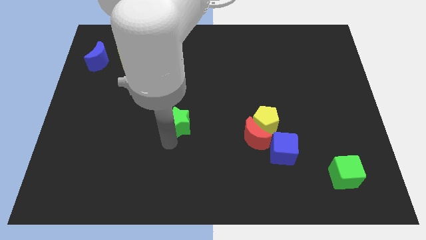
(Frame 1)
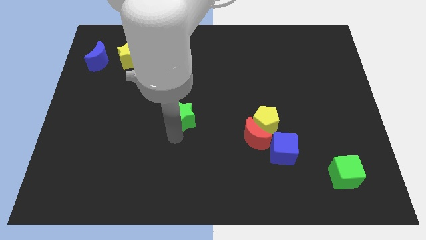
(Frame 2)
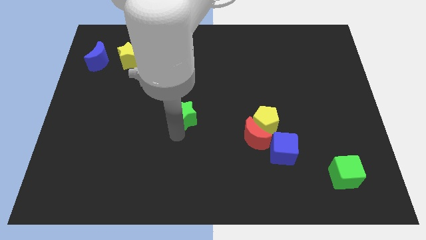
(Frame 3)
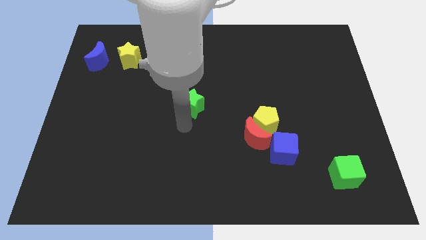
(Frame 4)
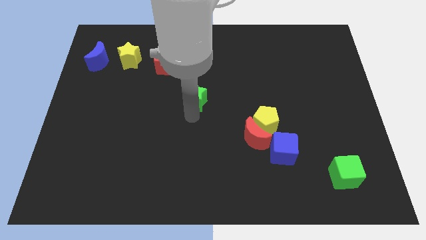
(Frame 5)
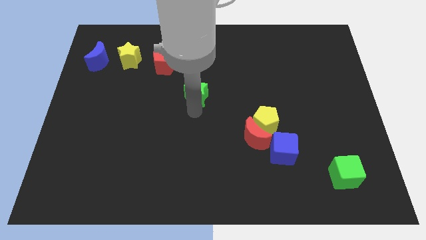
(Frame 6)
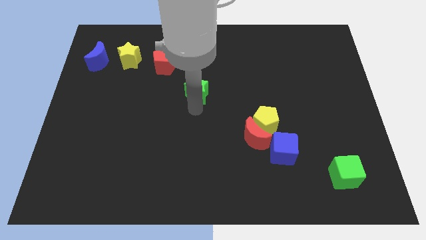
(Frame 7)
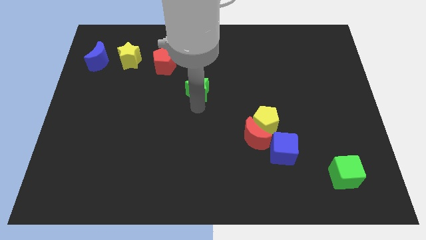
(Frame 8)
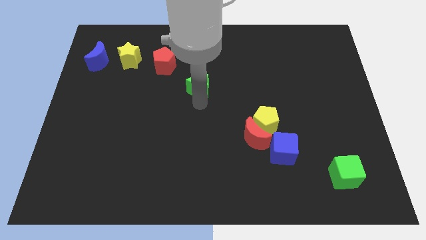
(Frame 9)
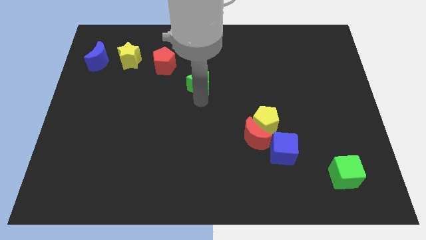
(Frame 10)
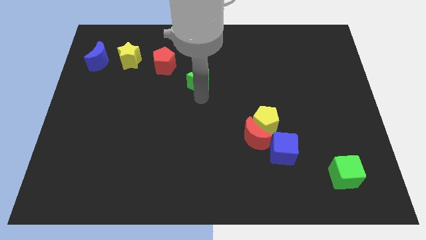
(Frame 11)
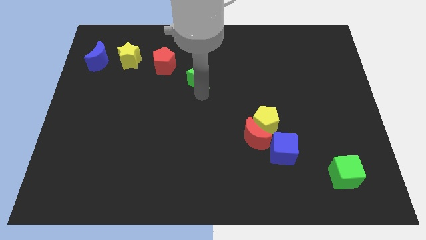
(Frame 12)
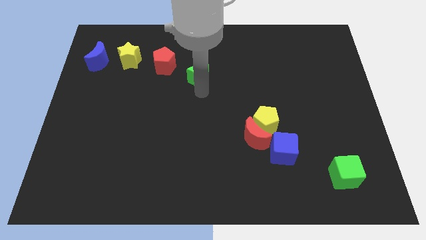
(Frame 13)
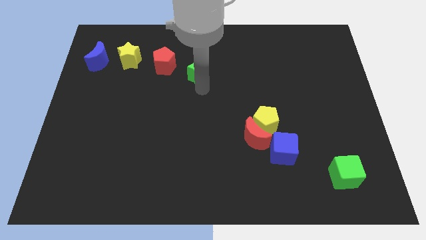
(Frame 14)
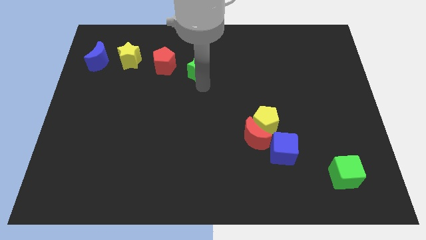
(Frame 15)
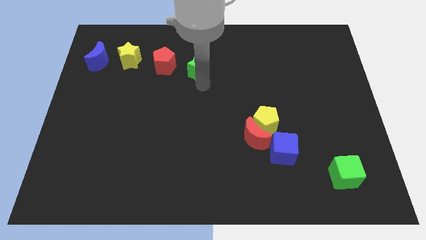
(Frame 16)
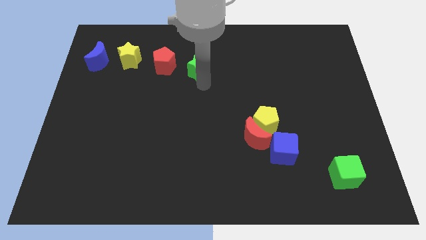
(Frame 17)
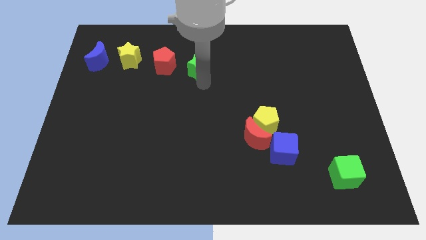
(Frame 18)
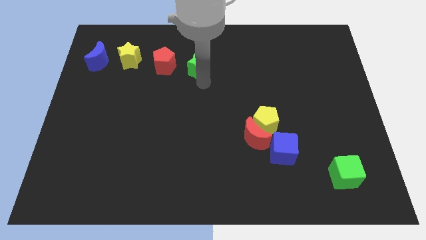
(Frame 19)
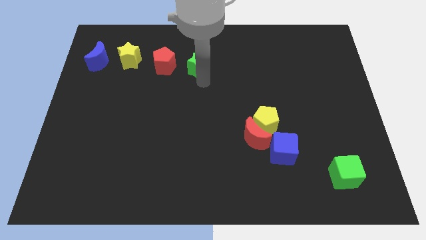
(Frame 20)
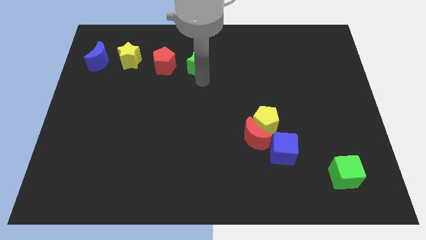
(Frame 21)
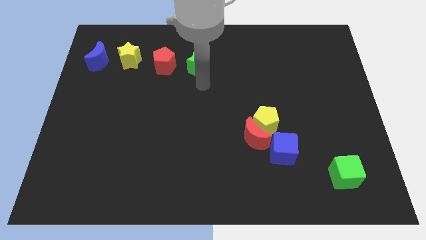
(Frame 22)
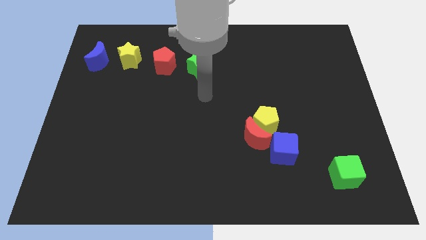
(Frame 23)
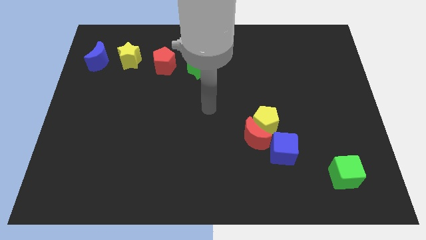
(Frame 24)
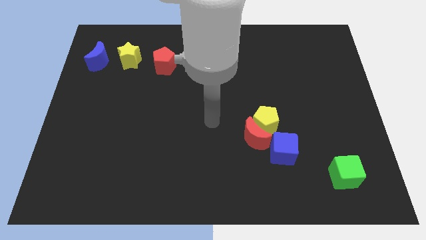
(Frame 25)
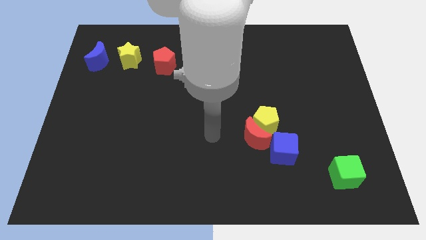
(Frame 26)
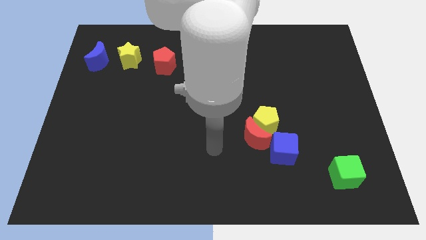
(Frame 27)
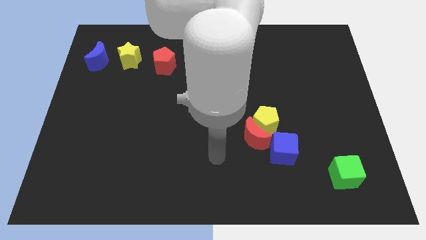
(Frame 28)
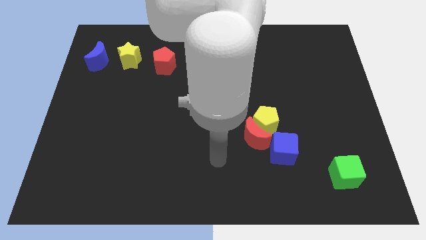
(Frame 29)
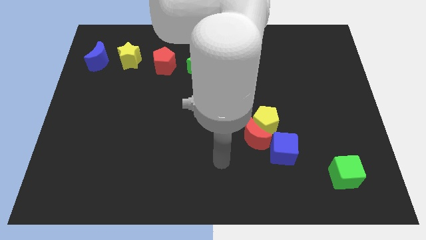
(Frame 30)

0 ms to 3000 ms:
move green star on right side of red pentagon

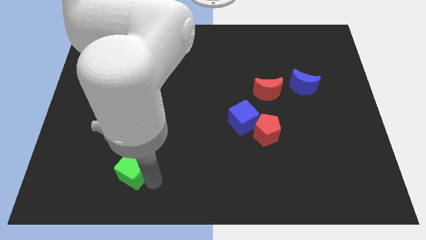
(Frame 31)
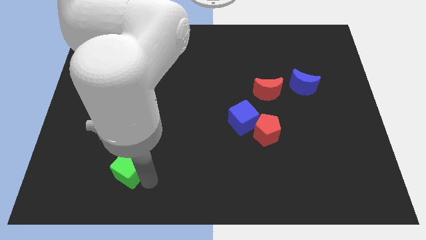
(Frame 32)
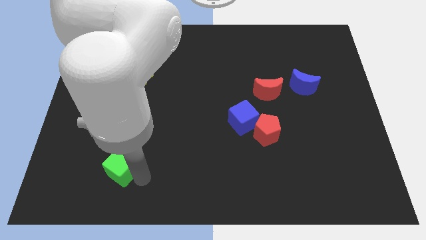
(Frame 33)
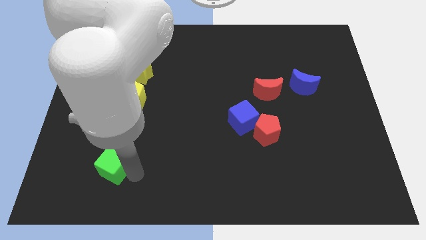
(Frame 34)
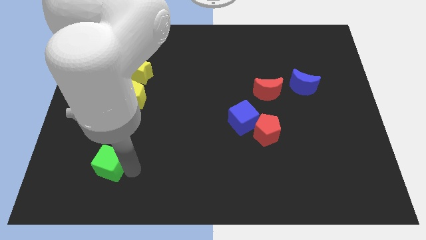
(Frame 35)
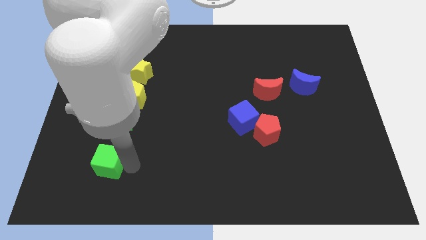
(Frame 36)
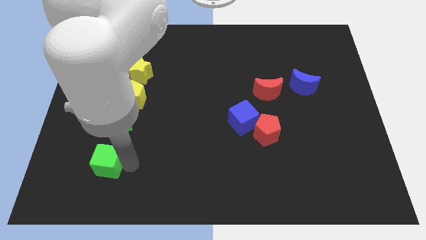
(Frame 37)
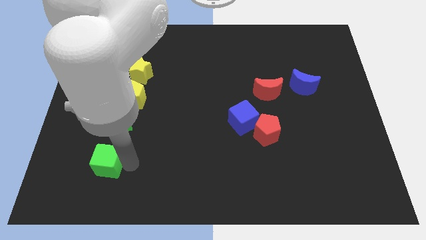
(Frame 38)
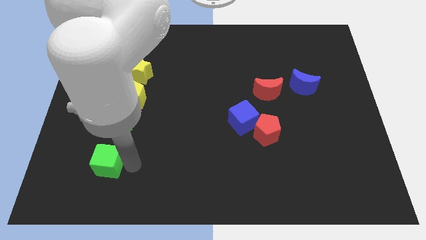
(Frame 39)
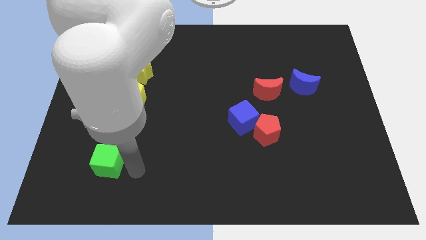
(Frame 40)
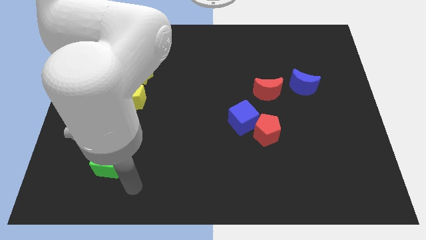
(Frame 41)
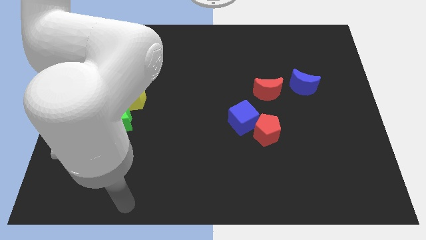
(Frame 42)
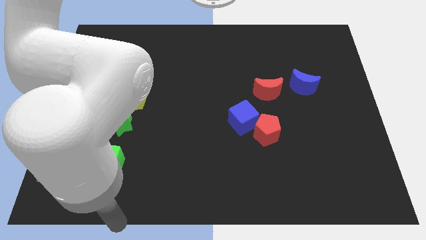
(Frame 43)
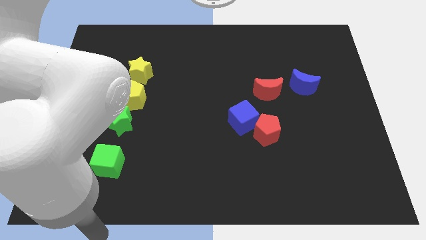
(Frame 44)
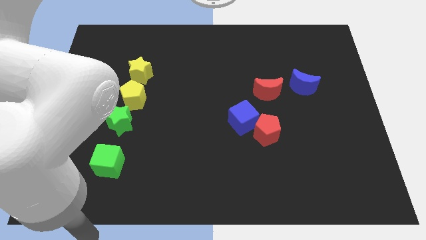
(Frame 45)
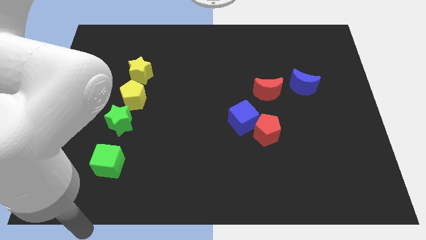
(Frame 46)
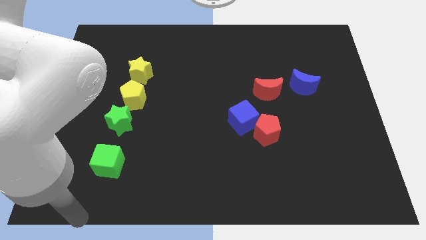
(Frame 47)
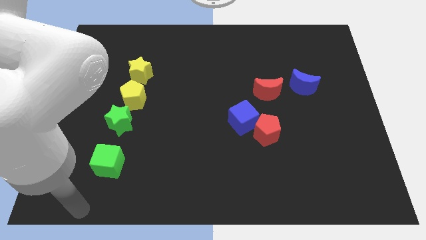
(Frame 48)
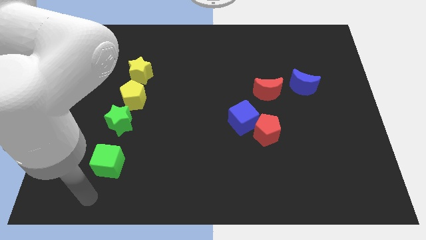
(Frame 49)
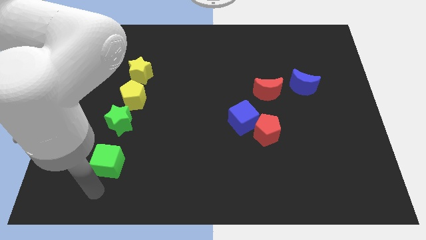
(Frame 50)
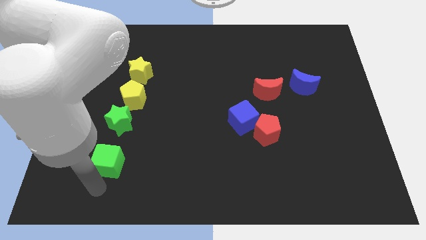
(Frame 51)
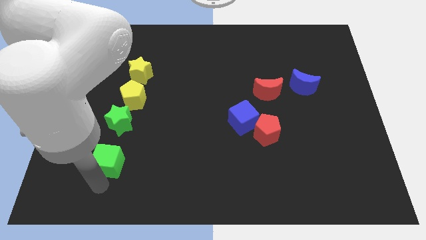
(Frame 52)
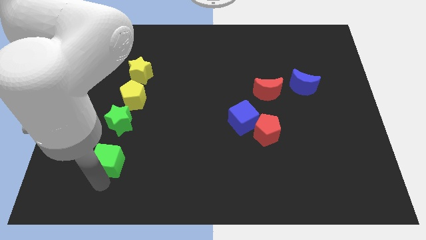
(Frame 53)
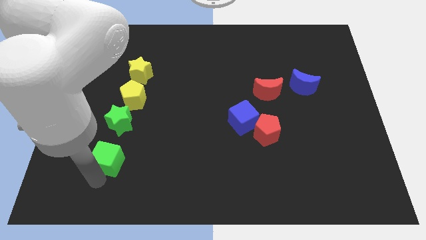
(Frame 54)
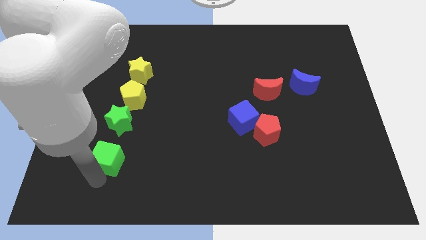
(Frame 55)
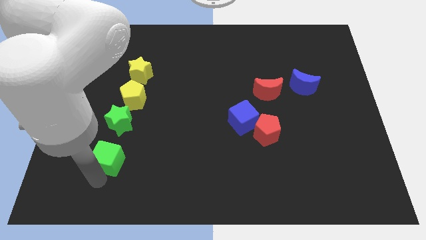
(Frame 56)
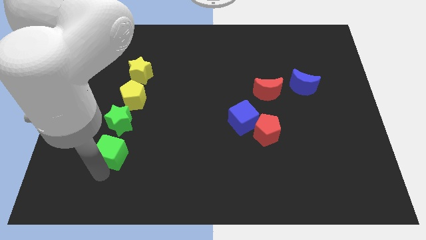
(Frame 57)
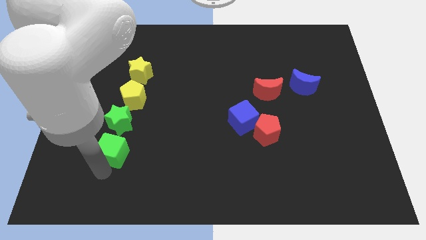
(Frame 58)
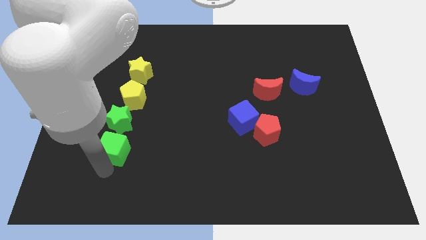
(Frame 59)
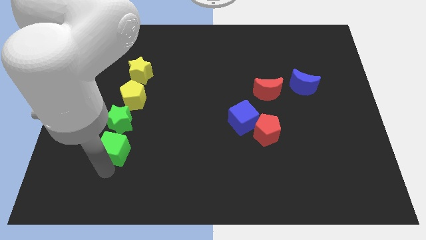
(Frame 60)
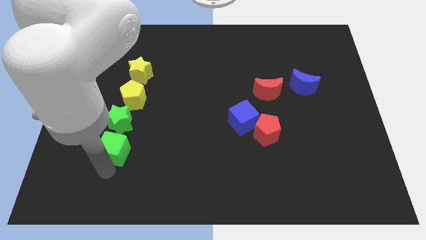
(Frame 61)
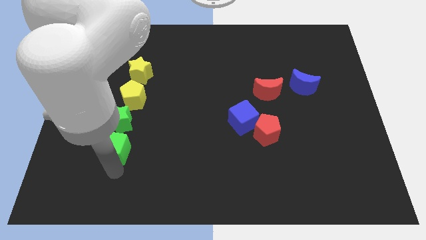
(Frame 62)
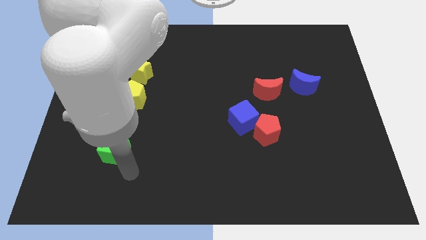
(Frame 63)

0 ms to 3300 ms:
move the green cube into the green star

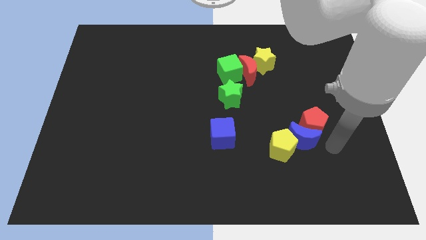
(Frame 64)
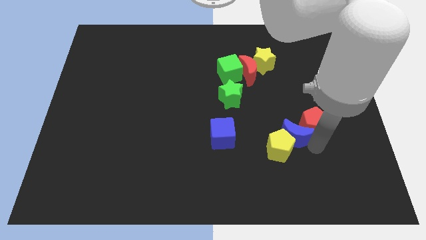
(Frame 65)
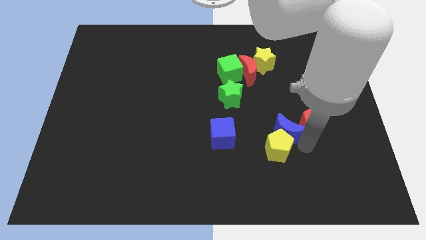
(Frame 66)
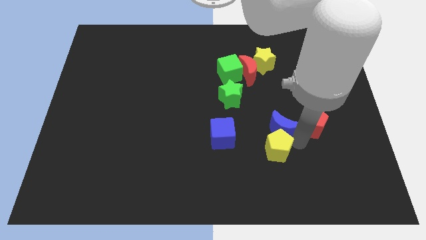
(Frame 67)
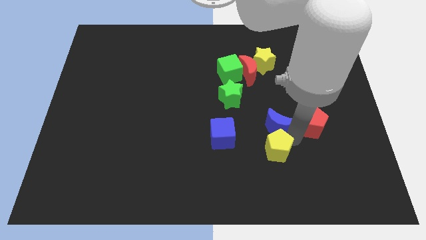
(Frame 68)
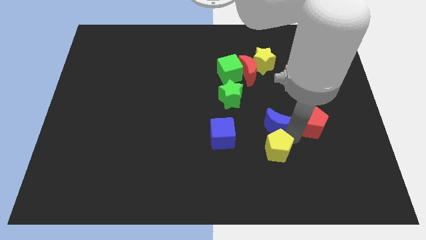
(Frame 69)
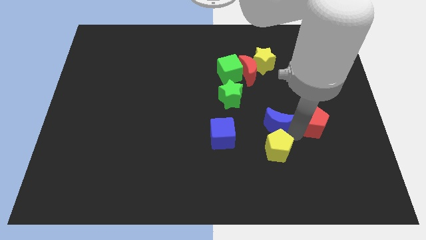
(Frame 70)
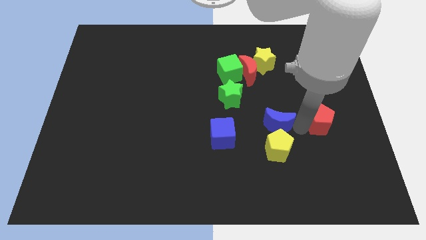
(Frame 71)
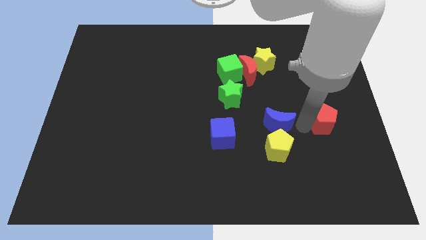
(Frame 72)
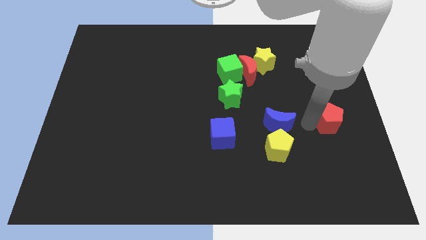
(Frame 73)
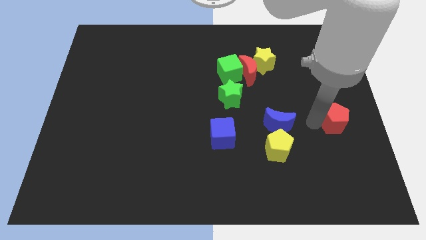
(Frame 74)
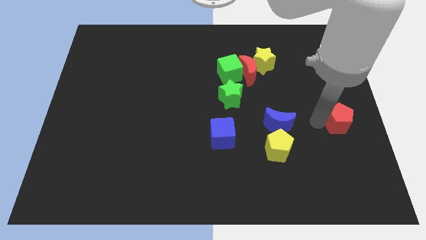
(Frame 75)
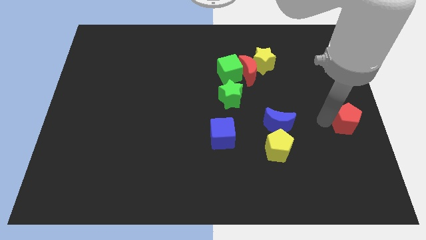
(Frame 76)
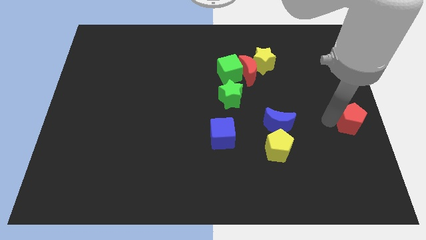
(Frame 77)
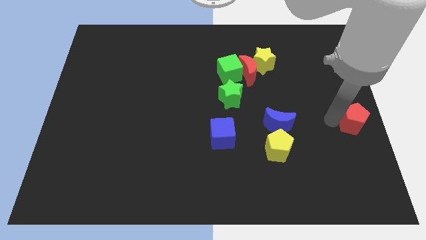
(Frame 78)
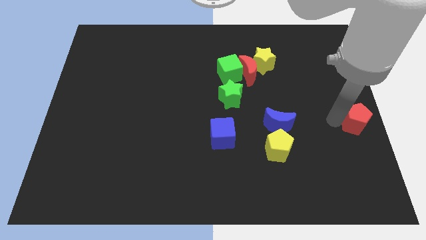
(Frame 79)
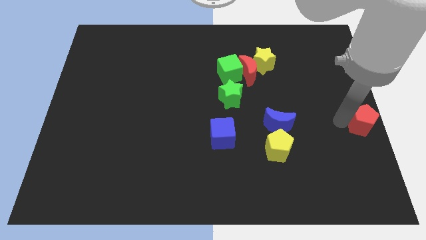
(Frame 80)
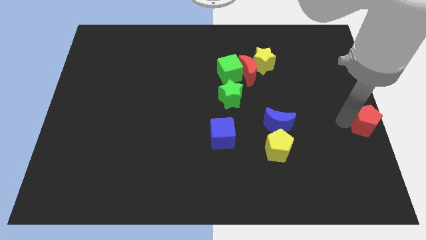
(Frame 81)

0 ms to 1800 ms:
separate the red pentagon with blue crescent to the center right

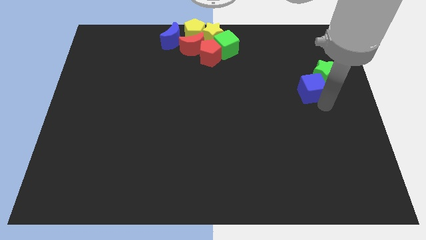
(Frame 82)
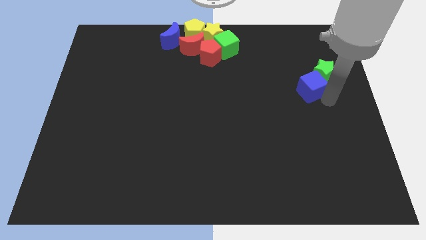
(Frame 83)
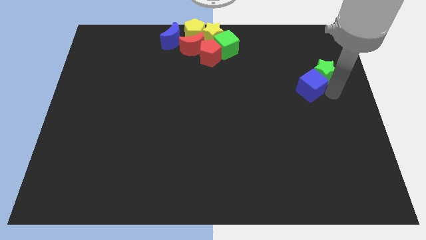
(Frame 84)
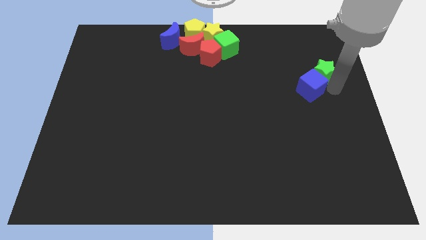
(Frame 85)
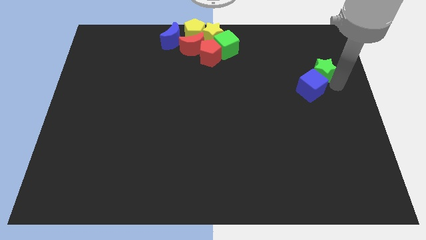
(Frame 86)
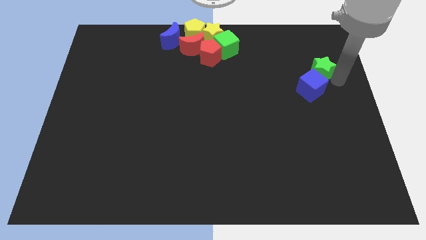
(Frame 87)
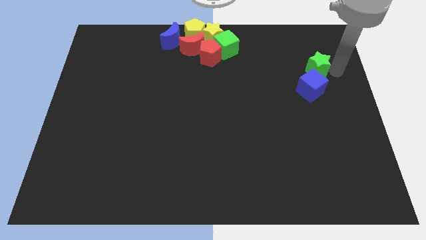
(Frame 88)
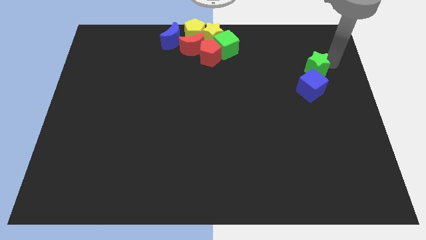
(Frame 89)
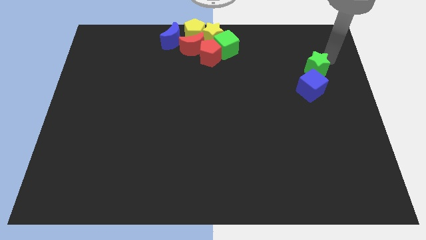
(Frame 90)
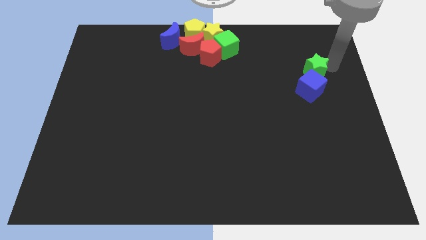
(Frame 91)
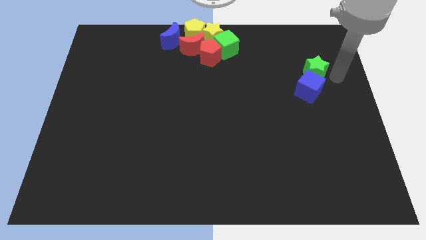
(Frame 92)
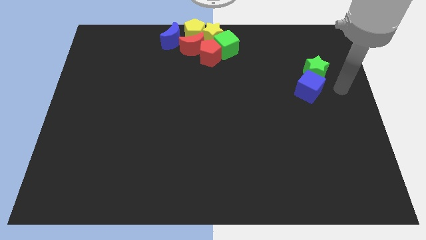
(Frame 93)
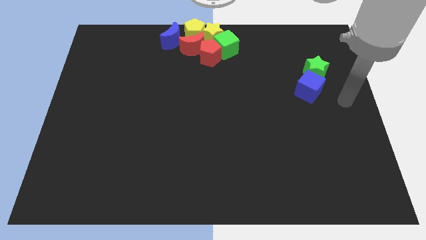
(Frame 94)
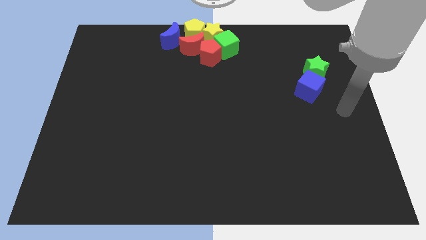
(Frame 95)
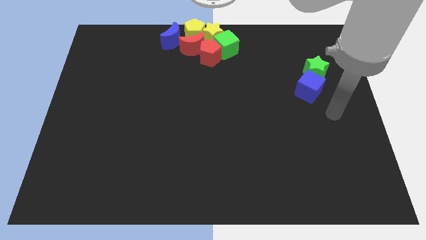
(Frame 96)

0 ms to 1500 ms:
tap the green star
